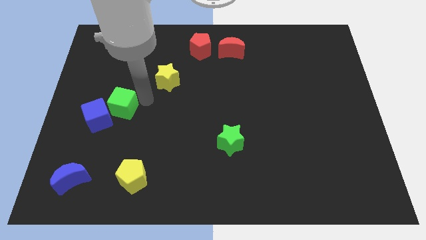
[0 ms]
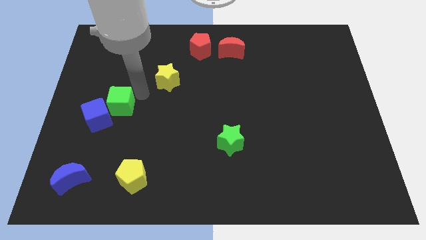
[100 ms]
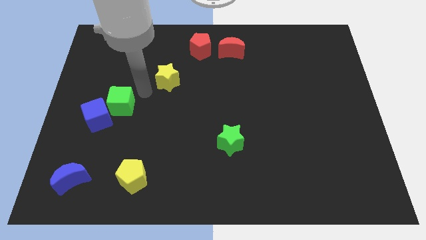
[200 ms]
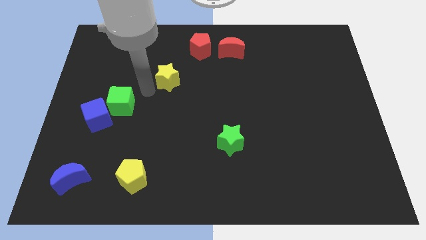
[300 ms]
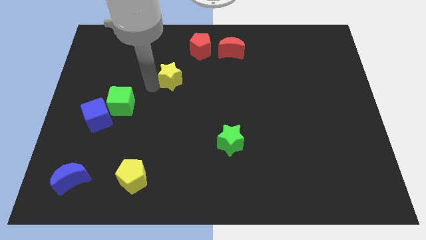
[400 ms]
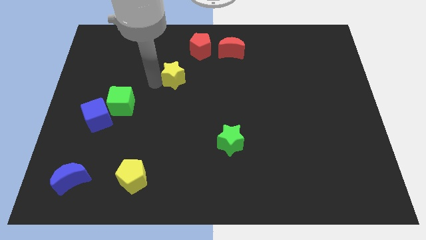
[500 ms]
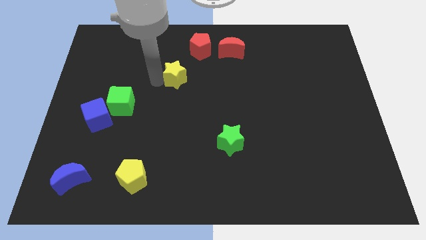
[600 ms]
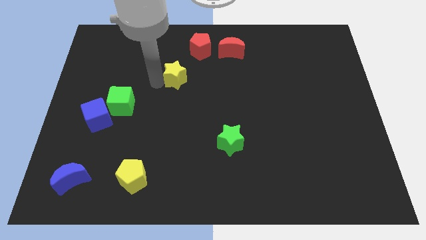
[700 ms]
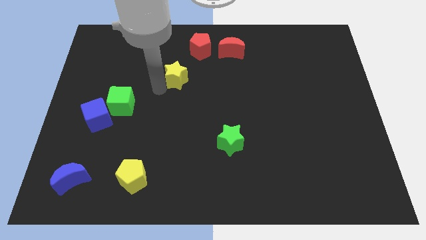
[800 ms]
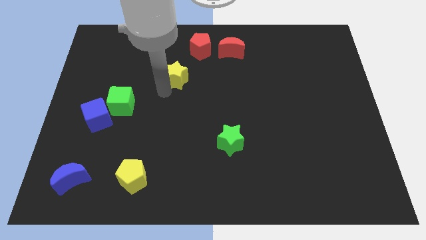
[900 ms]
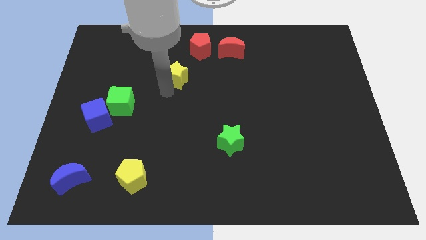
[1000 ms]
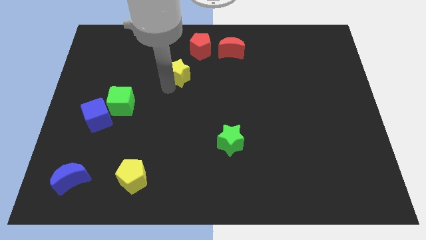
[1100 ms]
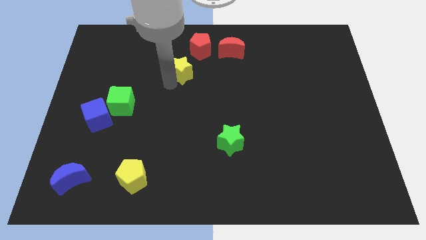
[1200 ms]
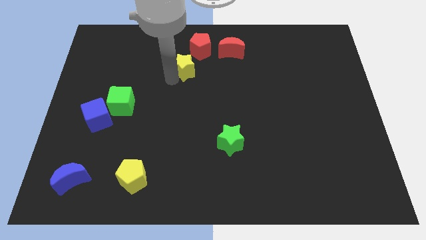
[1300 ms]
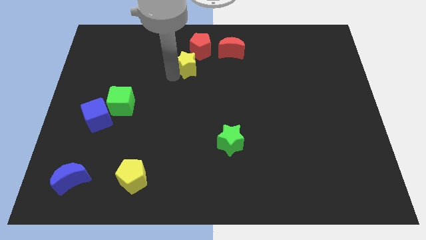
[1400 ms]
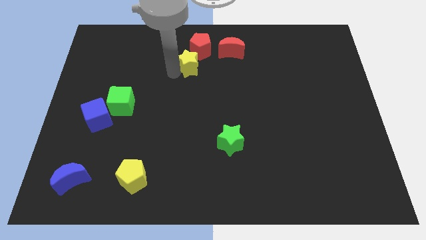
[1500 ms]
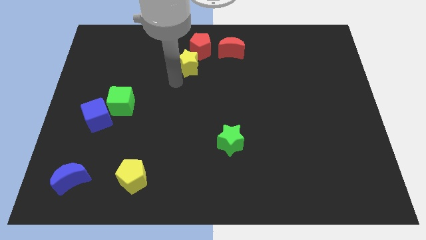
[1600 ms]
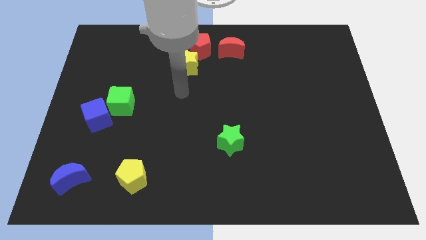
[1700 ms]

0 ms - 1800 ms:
move the yellow star diagonal to the red pentagon

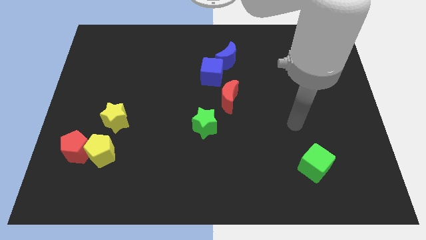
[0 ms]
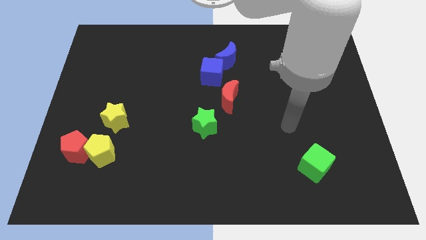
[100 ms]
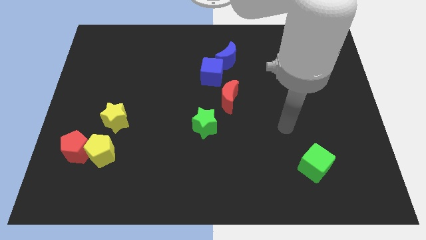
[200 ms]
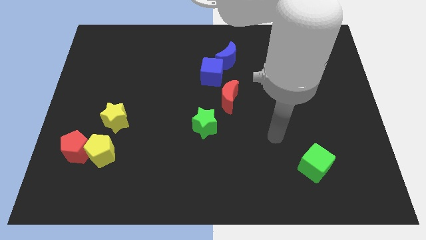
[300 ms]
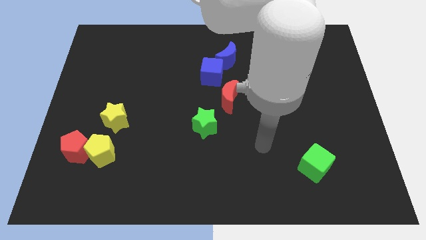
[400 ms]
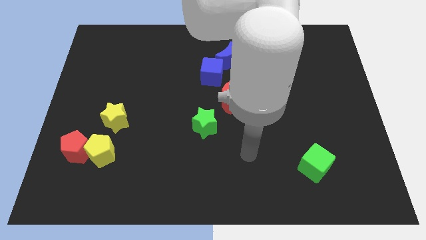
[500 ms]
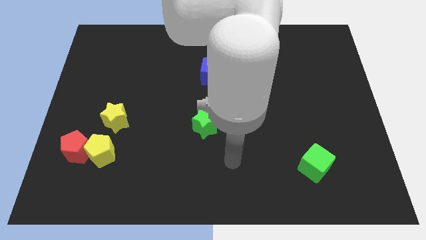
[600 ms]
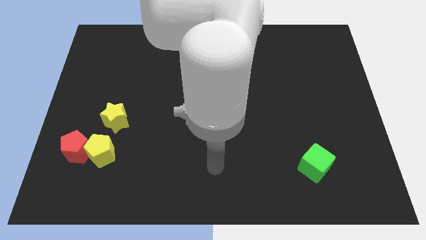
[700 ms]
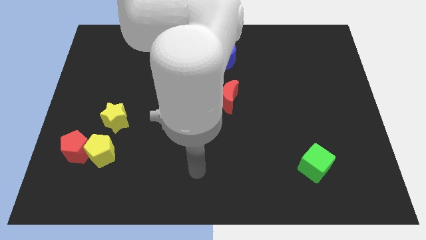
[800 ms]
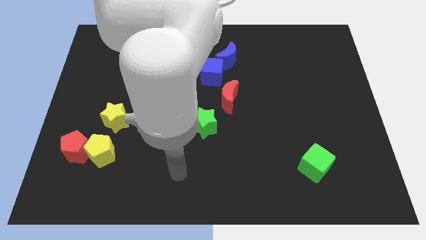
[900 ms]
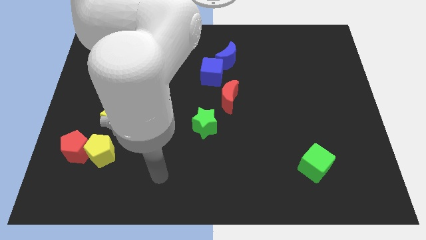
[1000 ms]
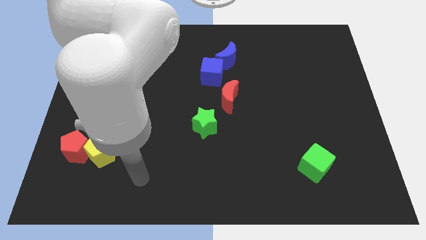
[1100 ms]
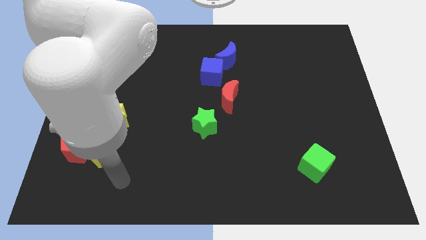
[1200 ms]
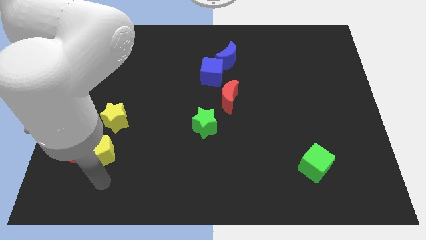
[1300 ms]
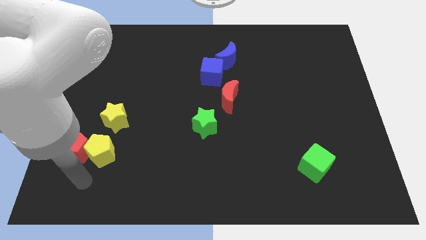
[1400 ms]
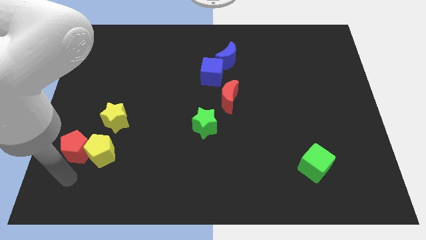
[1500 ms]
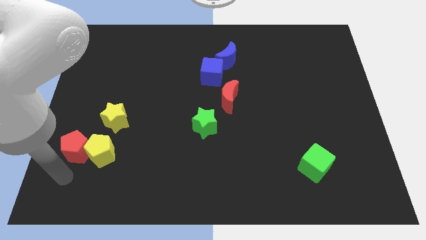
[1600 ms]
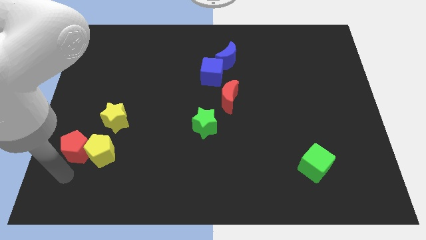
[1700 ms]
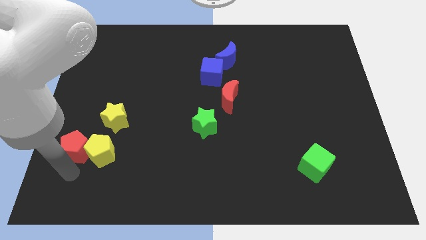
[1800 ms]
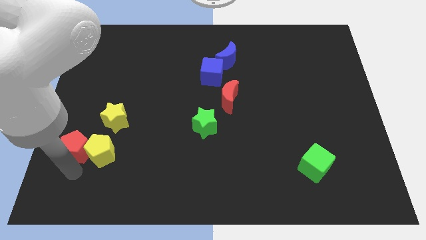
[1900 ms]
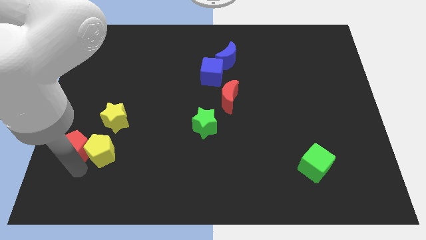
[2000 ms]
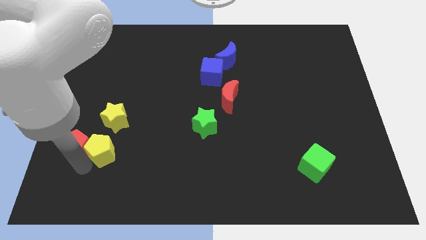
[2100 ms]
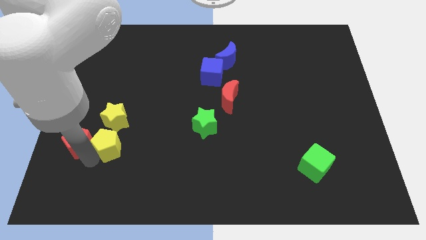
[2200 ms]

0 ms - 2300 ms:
move your arm and slightly push the red and yellow pentagon

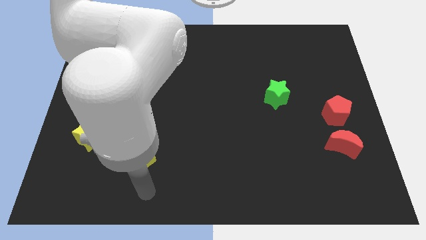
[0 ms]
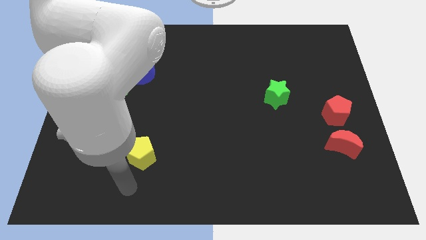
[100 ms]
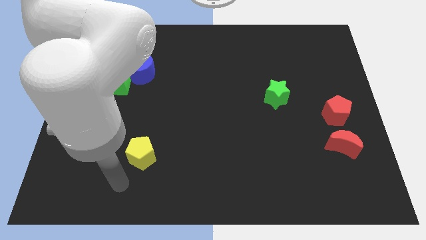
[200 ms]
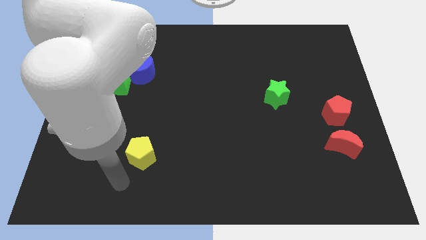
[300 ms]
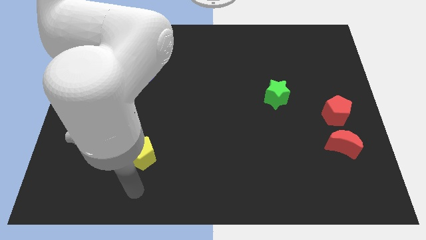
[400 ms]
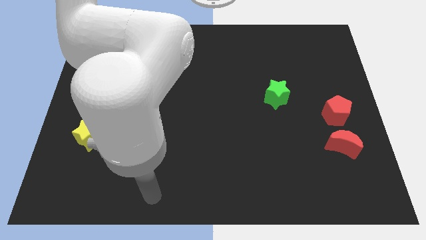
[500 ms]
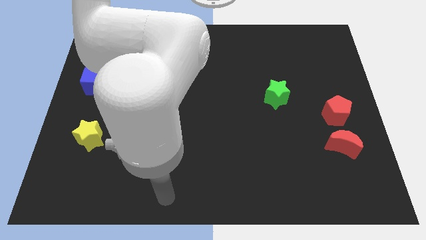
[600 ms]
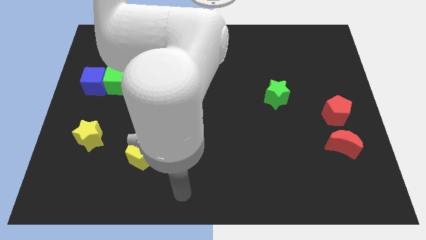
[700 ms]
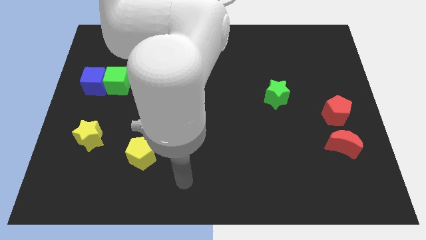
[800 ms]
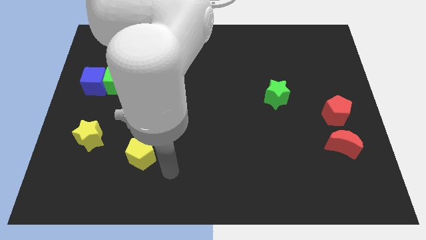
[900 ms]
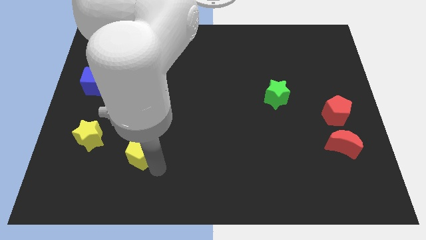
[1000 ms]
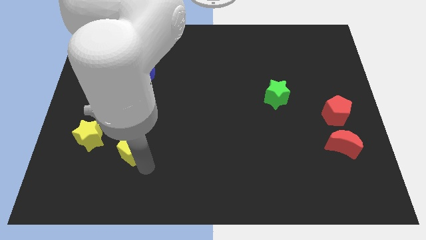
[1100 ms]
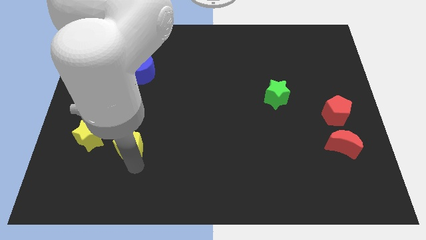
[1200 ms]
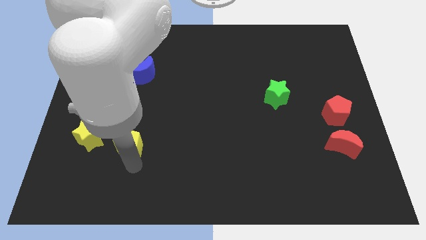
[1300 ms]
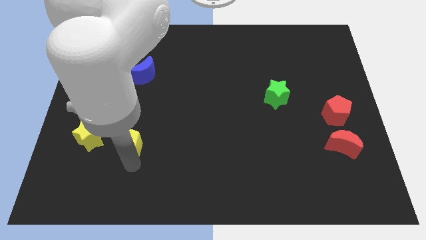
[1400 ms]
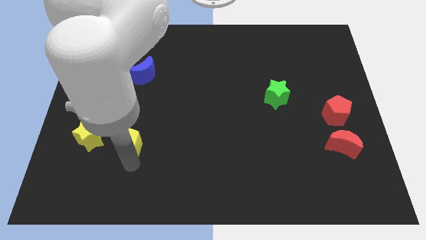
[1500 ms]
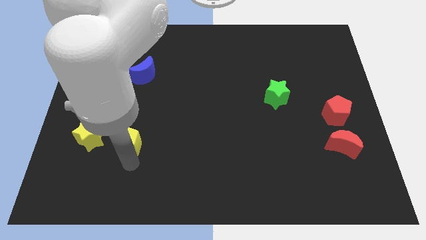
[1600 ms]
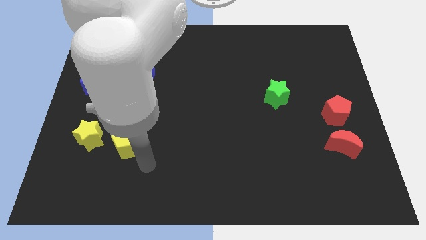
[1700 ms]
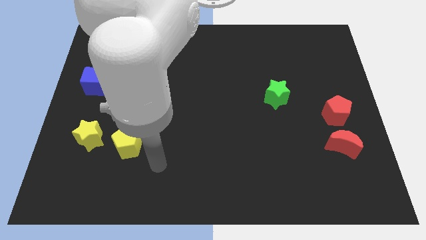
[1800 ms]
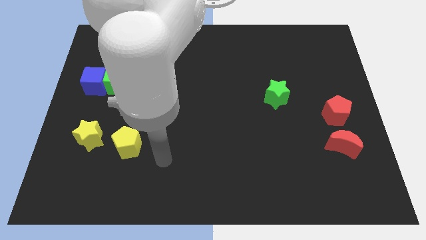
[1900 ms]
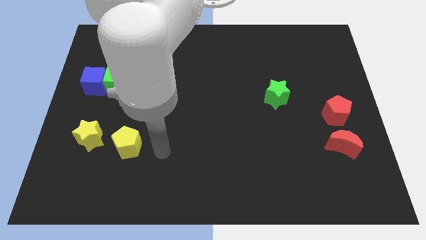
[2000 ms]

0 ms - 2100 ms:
push the yellow pentagon to the right of yellow star

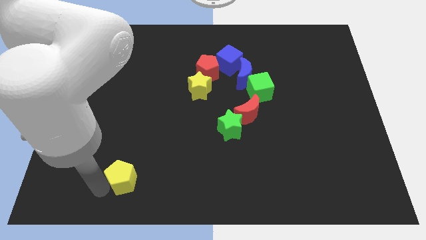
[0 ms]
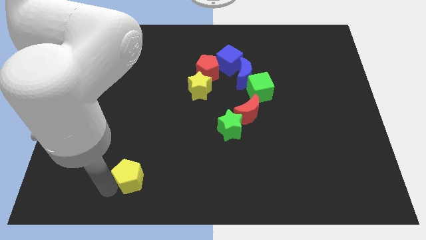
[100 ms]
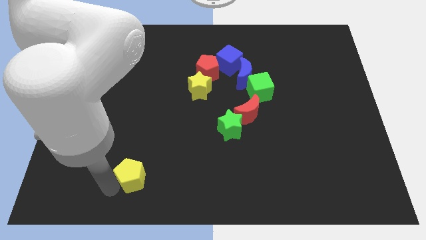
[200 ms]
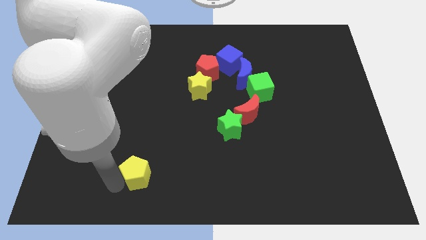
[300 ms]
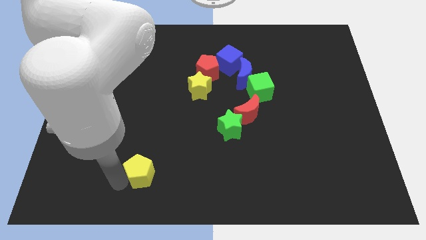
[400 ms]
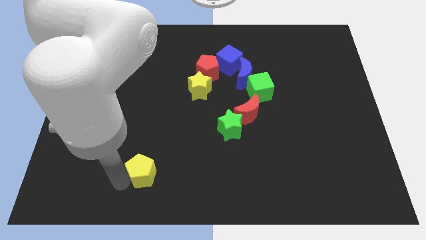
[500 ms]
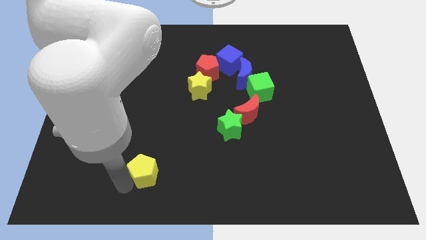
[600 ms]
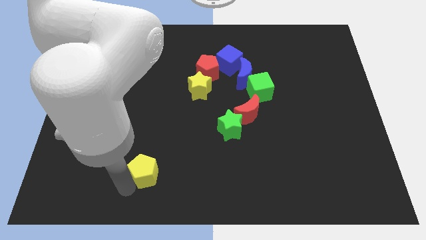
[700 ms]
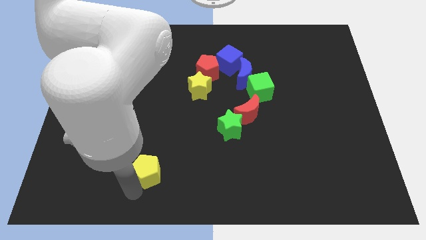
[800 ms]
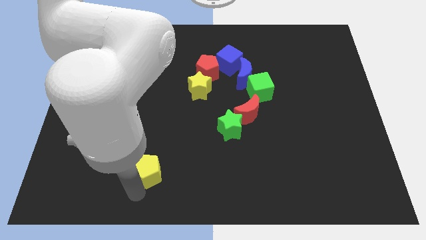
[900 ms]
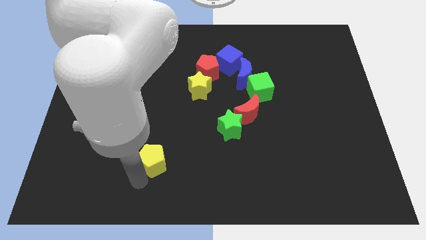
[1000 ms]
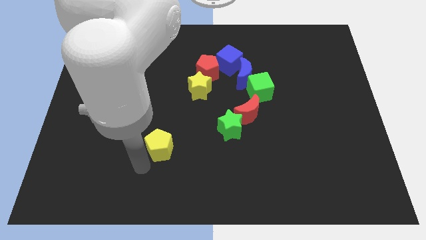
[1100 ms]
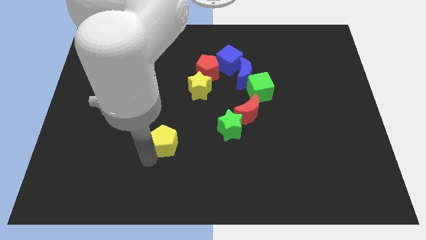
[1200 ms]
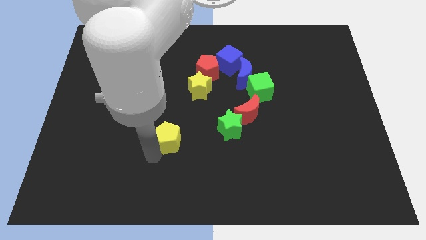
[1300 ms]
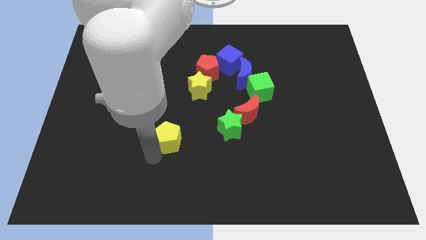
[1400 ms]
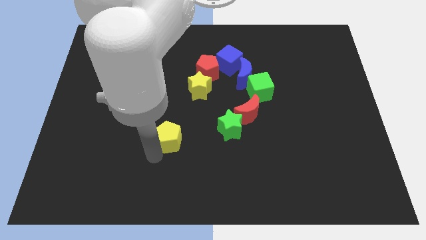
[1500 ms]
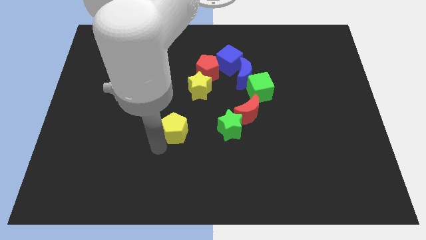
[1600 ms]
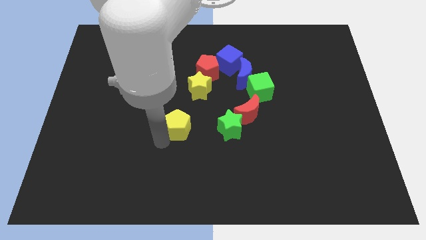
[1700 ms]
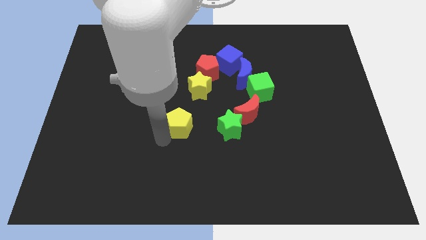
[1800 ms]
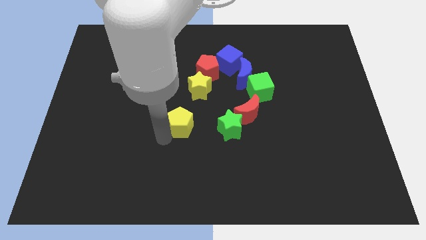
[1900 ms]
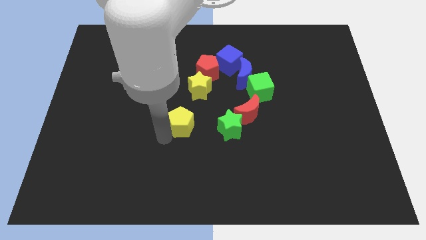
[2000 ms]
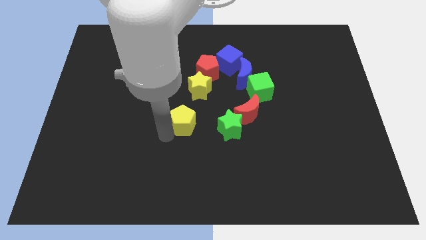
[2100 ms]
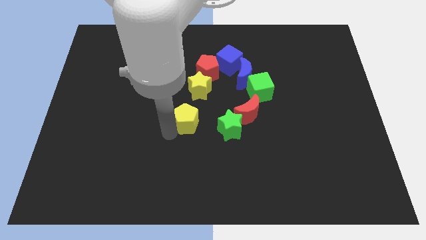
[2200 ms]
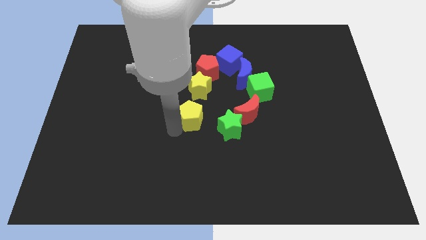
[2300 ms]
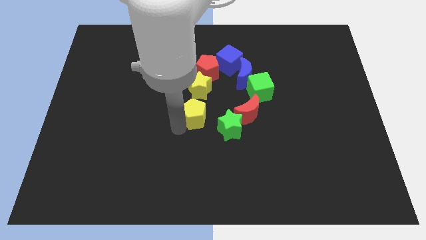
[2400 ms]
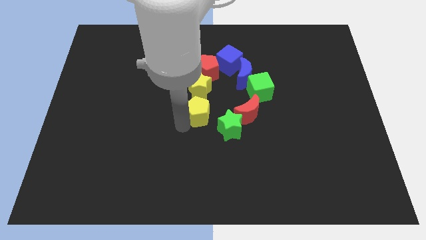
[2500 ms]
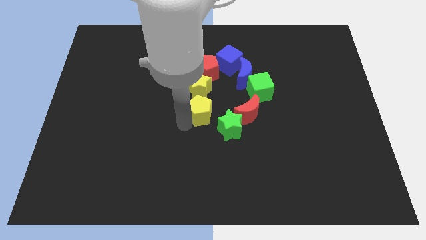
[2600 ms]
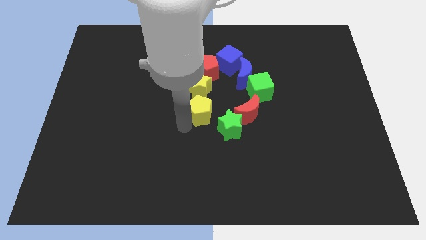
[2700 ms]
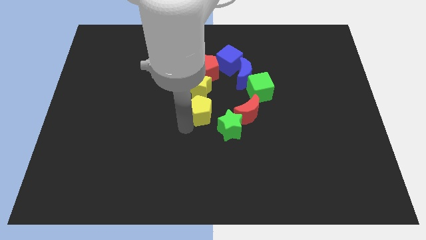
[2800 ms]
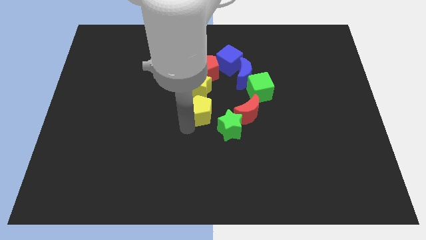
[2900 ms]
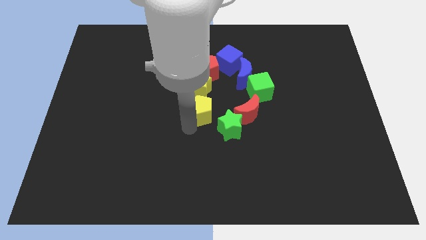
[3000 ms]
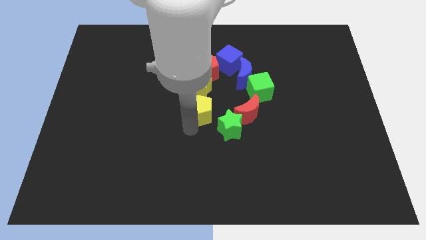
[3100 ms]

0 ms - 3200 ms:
push yellow pentagon below yellow star
